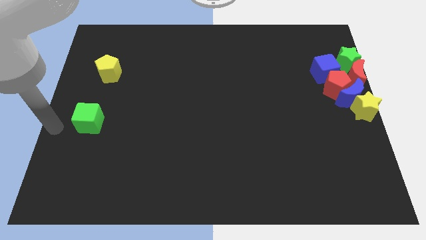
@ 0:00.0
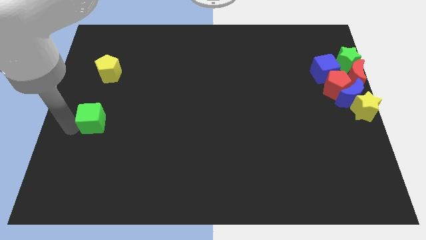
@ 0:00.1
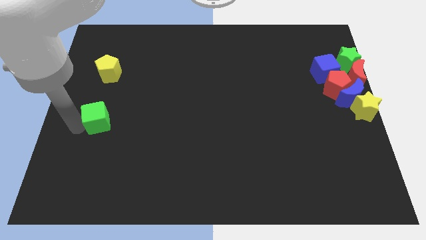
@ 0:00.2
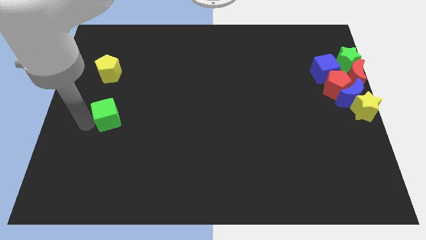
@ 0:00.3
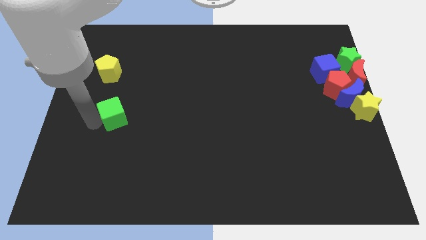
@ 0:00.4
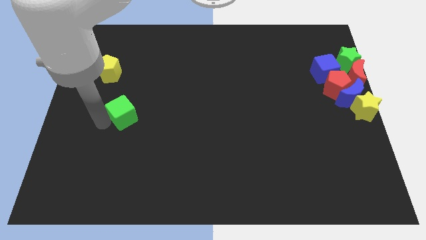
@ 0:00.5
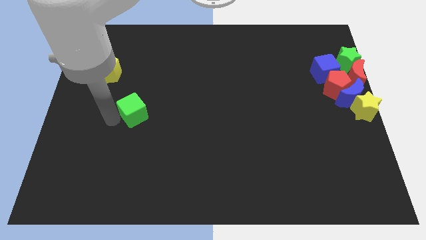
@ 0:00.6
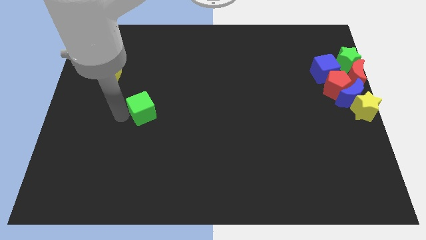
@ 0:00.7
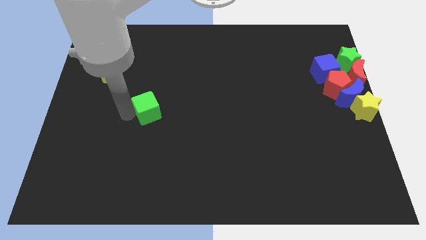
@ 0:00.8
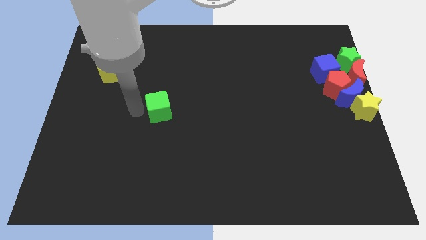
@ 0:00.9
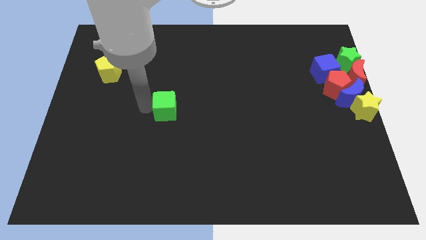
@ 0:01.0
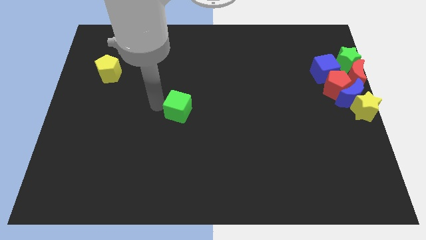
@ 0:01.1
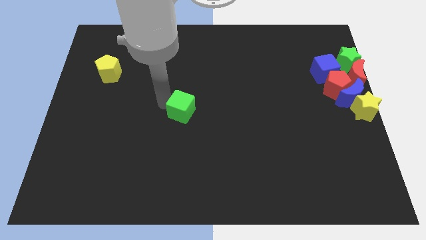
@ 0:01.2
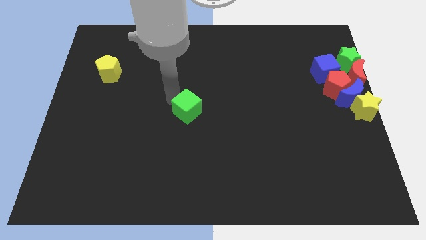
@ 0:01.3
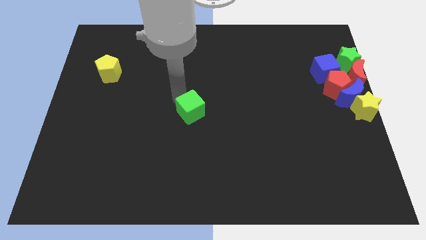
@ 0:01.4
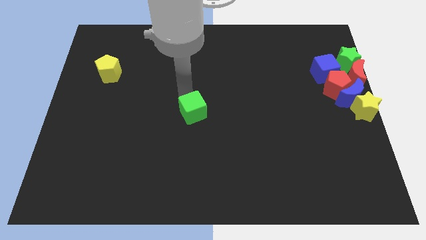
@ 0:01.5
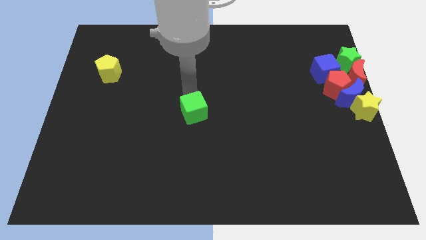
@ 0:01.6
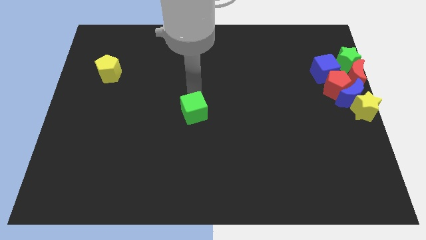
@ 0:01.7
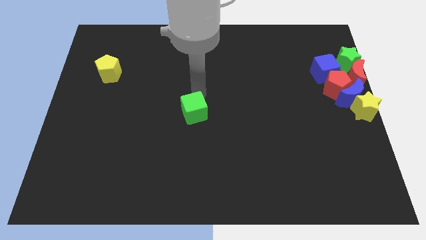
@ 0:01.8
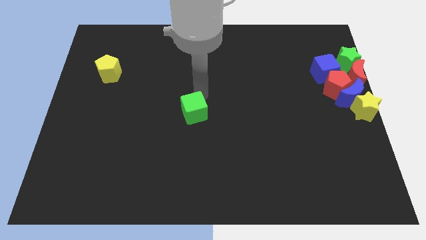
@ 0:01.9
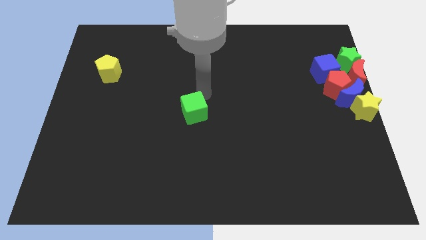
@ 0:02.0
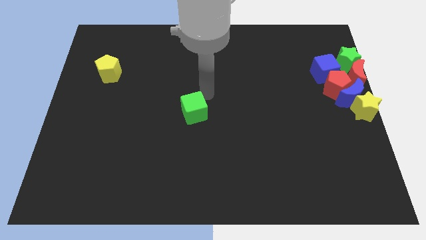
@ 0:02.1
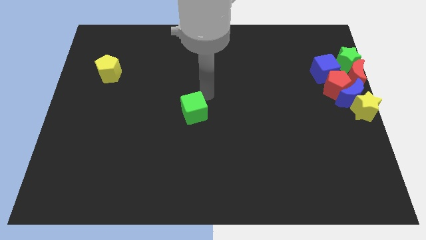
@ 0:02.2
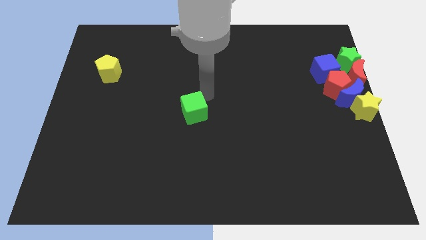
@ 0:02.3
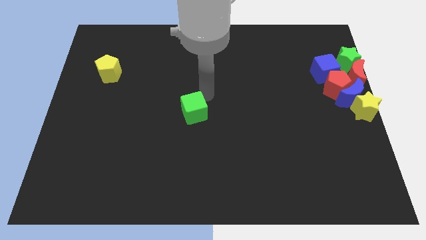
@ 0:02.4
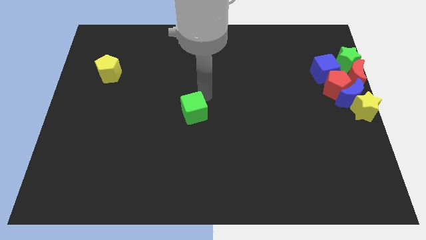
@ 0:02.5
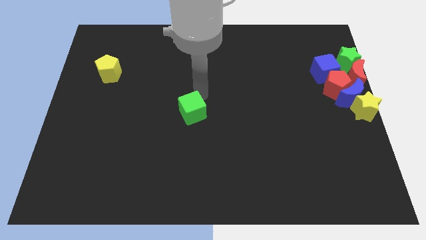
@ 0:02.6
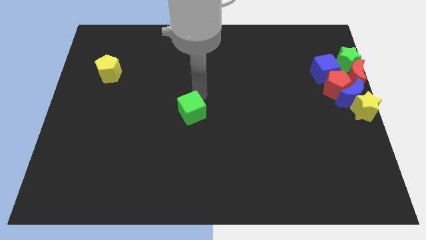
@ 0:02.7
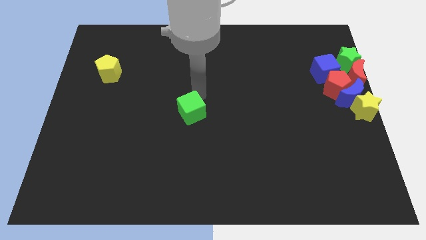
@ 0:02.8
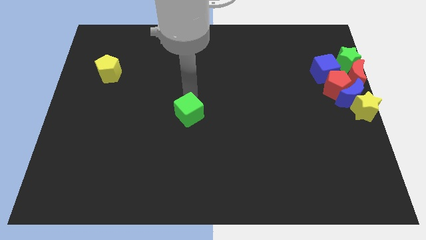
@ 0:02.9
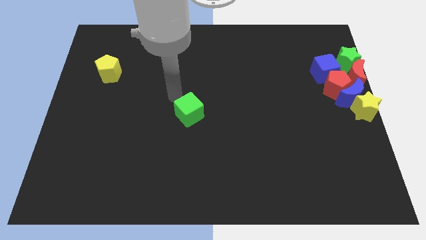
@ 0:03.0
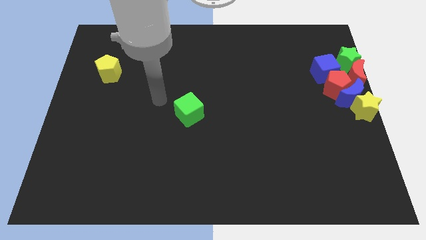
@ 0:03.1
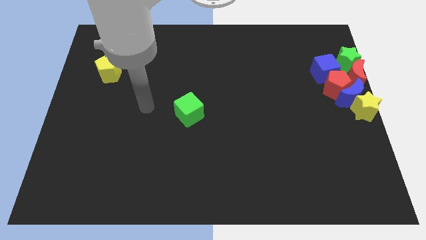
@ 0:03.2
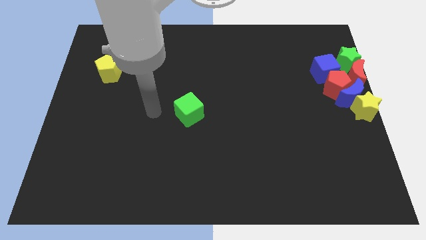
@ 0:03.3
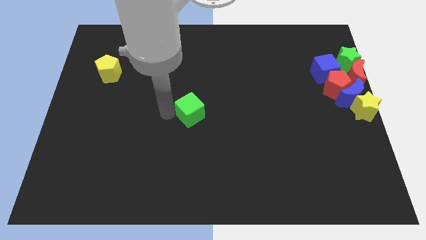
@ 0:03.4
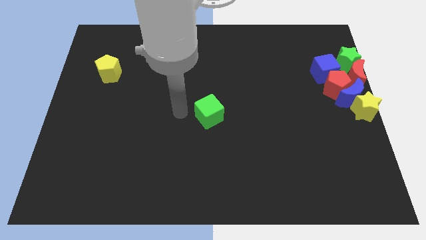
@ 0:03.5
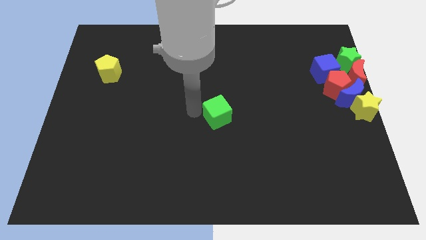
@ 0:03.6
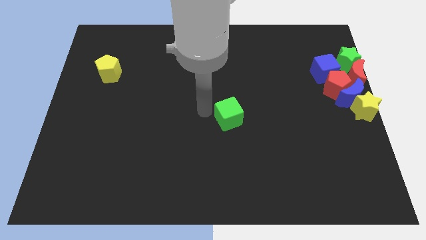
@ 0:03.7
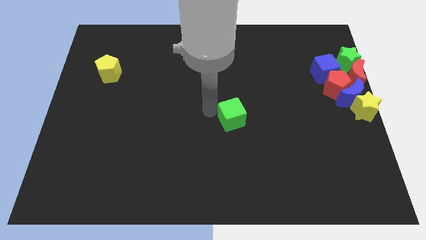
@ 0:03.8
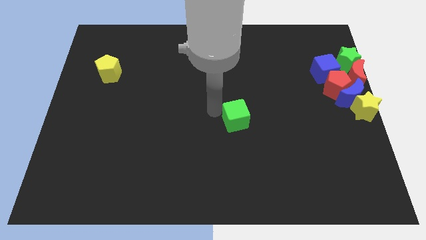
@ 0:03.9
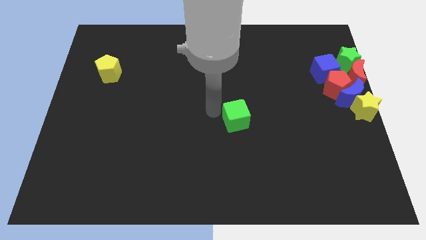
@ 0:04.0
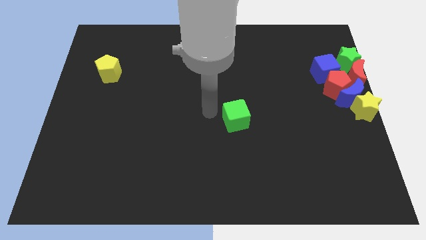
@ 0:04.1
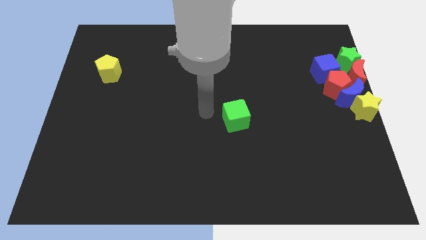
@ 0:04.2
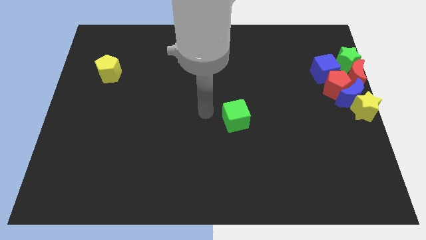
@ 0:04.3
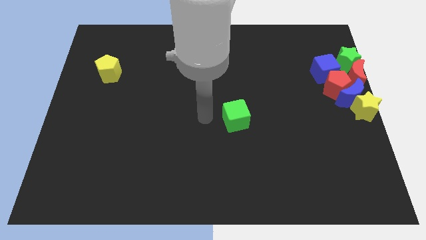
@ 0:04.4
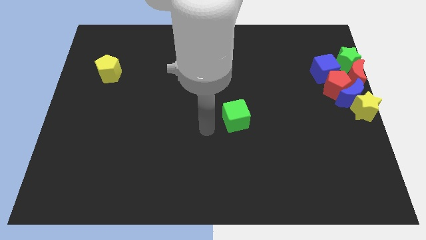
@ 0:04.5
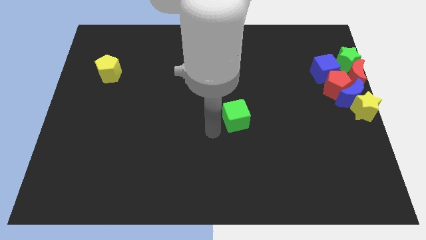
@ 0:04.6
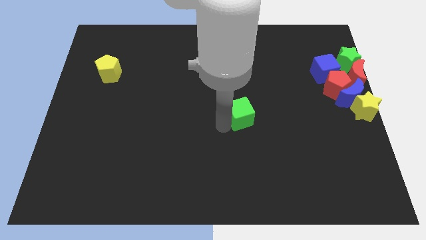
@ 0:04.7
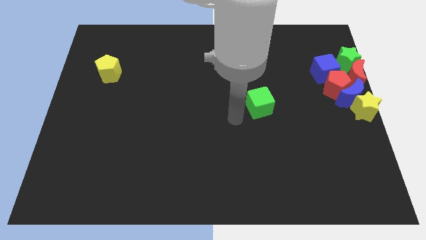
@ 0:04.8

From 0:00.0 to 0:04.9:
place the green cube to the center

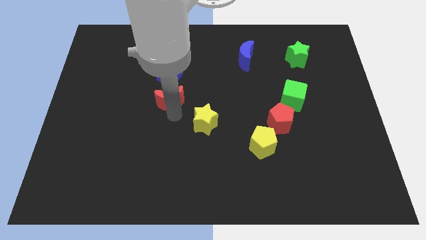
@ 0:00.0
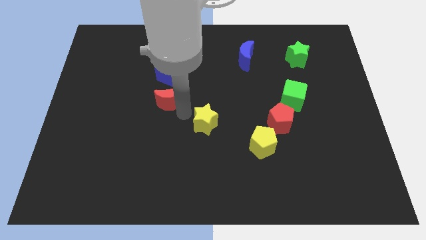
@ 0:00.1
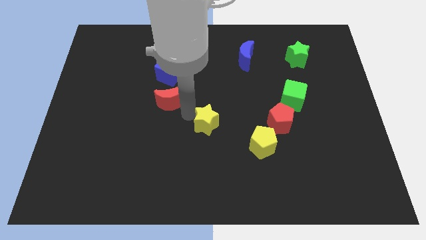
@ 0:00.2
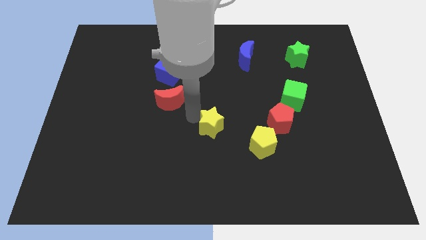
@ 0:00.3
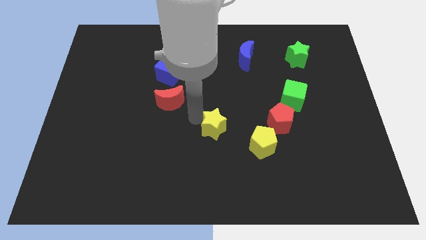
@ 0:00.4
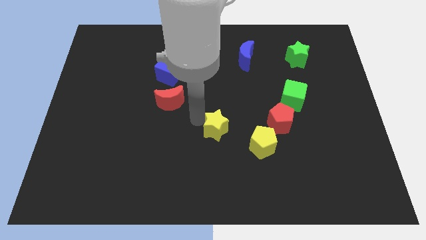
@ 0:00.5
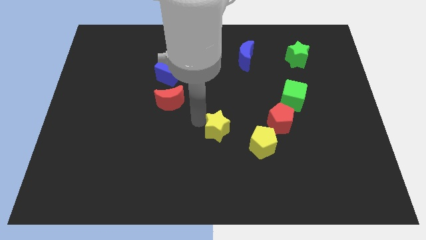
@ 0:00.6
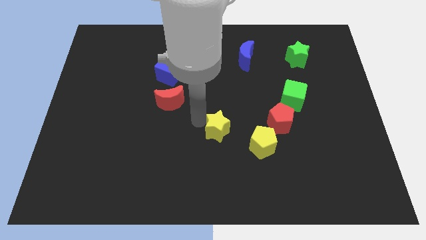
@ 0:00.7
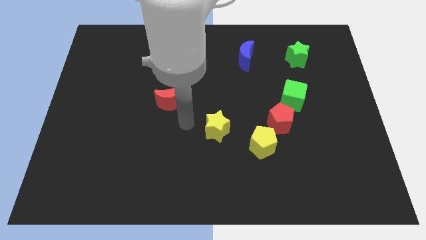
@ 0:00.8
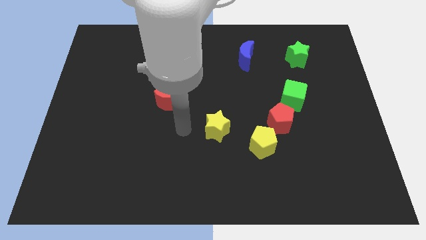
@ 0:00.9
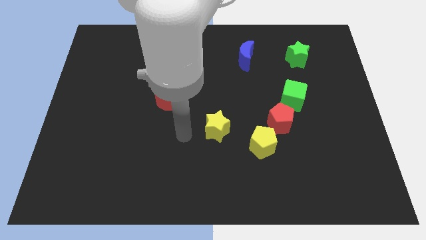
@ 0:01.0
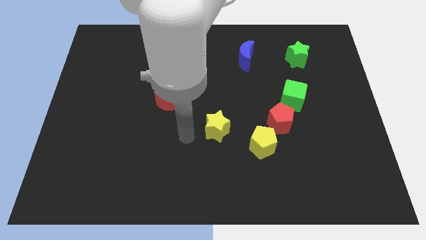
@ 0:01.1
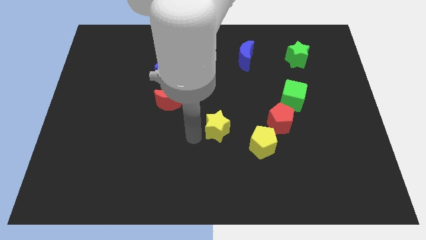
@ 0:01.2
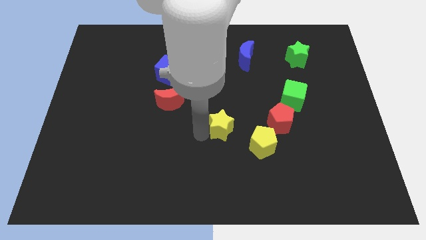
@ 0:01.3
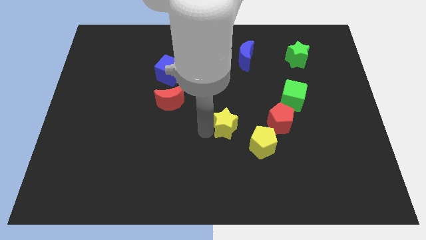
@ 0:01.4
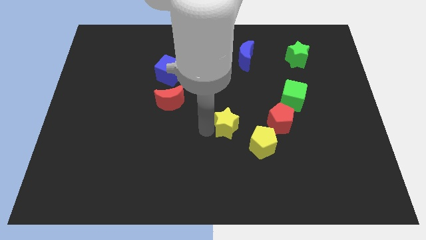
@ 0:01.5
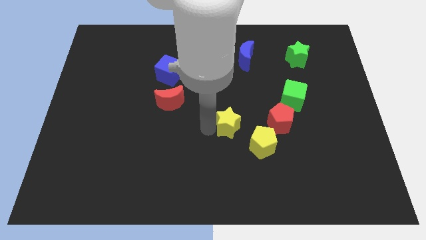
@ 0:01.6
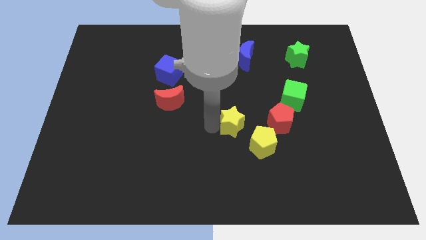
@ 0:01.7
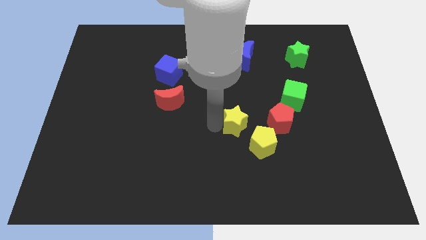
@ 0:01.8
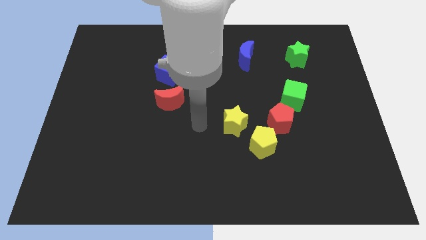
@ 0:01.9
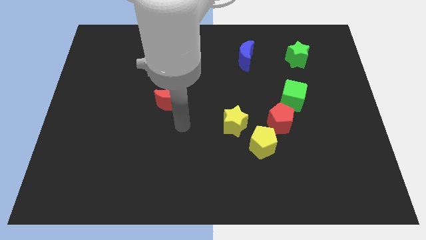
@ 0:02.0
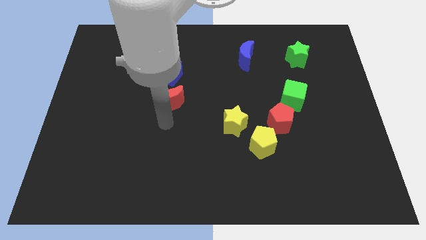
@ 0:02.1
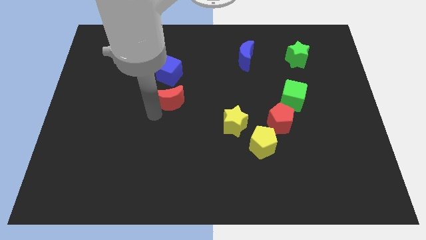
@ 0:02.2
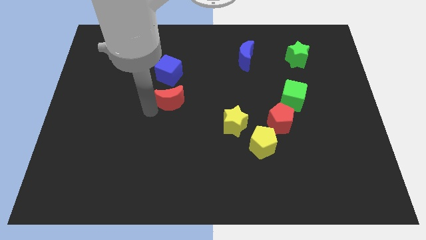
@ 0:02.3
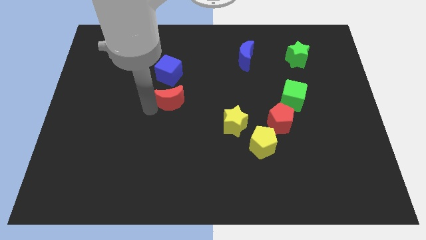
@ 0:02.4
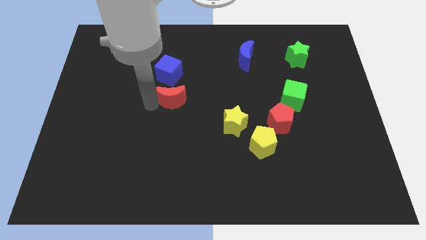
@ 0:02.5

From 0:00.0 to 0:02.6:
place the yellow star at the top left side of yellow pentagon

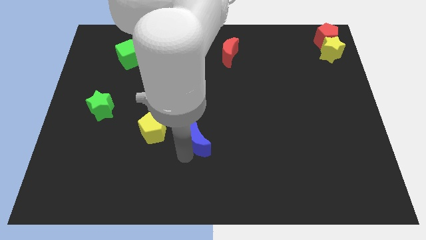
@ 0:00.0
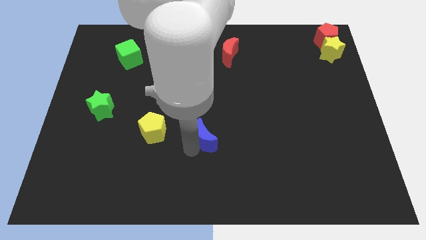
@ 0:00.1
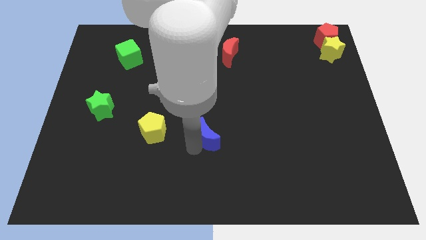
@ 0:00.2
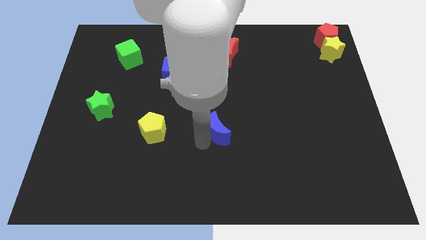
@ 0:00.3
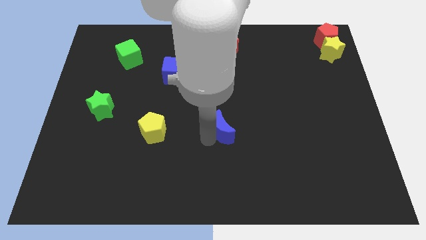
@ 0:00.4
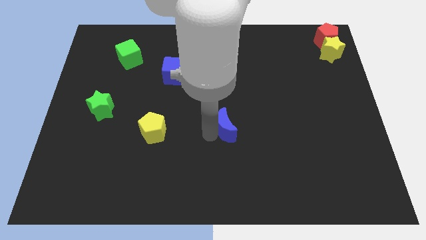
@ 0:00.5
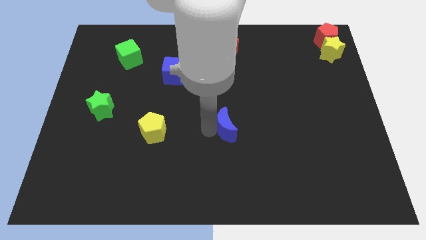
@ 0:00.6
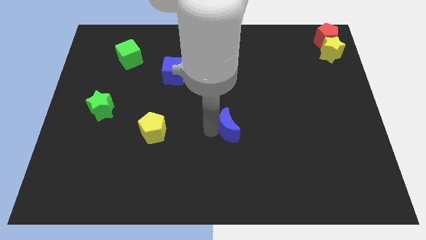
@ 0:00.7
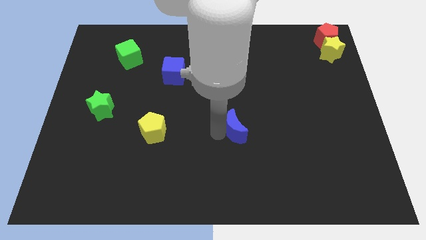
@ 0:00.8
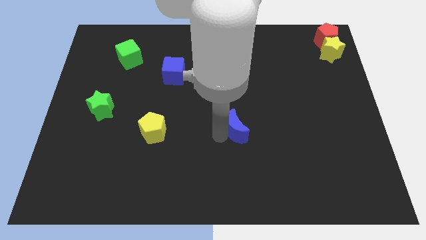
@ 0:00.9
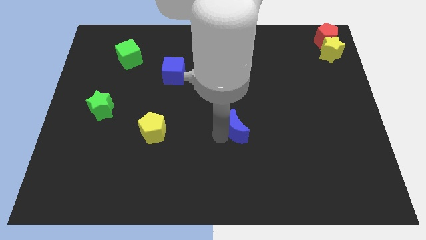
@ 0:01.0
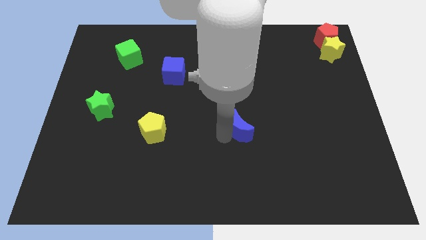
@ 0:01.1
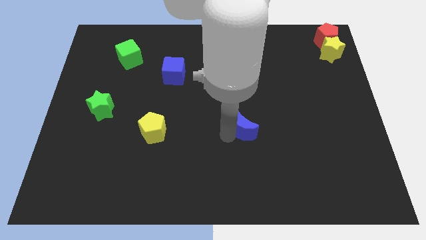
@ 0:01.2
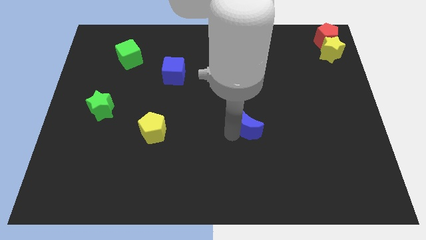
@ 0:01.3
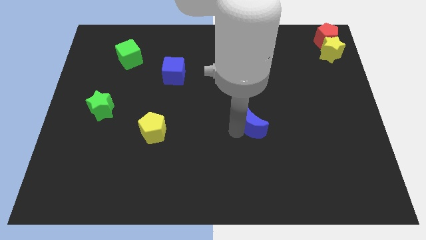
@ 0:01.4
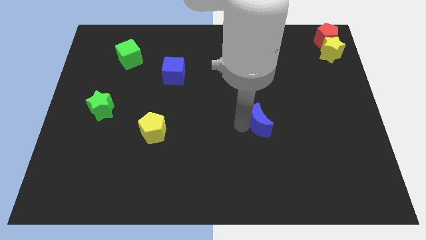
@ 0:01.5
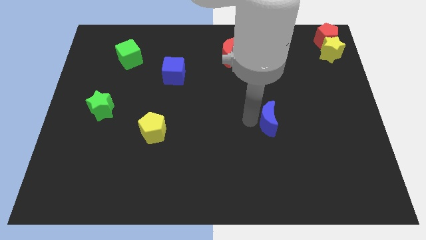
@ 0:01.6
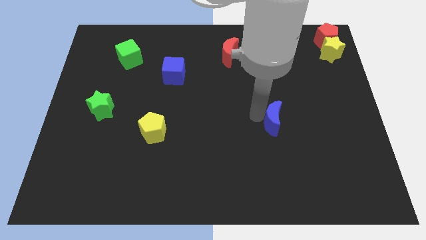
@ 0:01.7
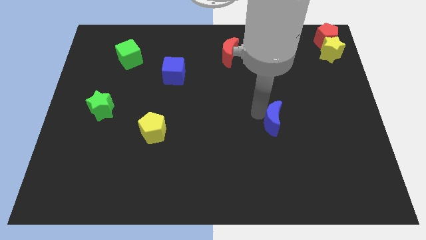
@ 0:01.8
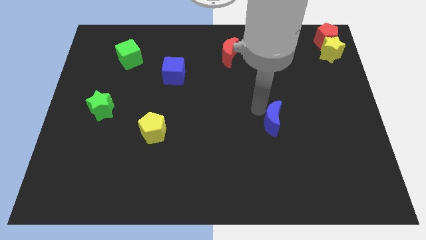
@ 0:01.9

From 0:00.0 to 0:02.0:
drag the blue moon diagonally bottom right to the red crescent
